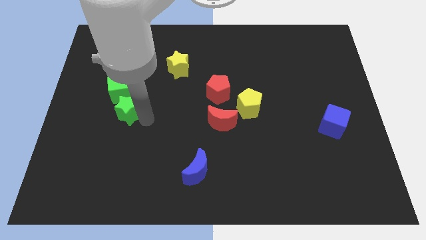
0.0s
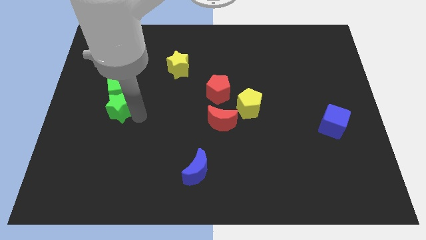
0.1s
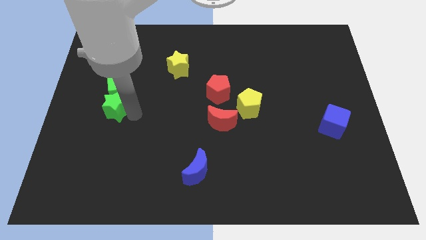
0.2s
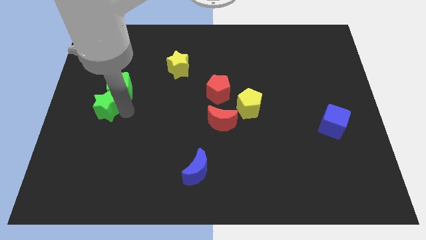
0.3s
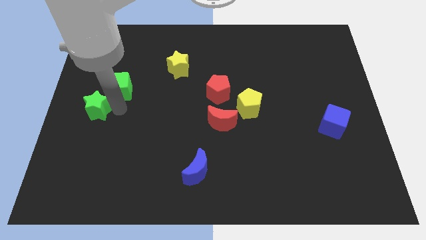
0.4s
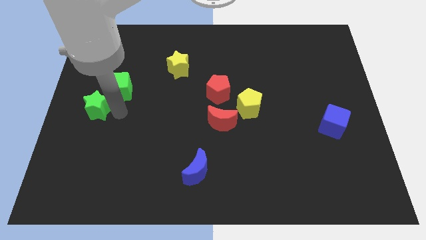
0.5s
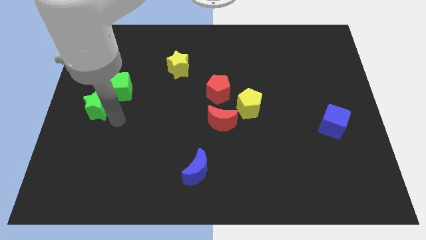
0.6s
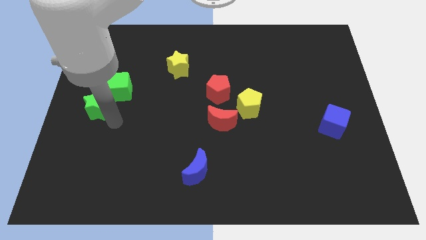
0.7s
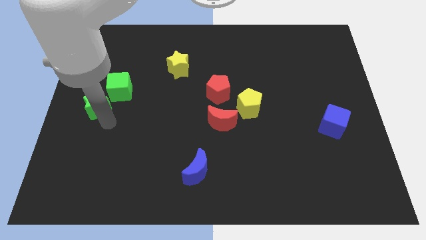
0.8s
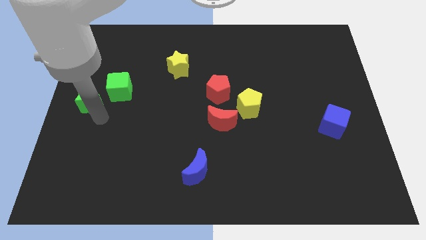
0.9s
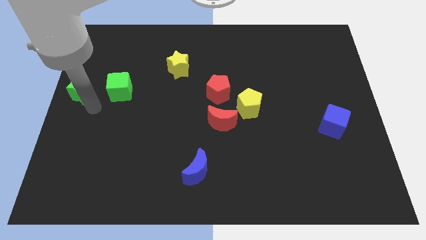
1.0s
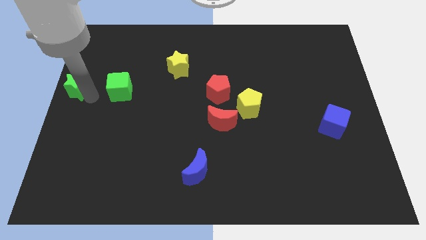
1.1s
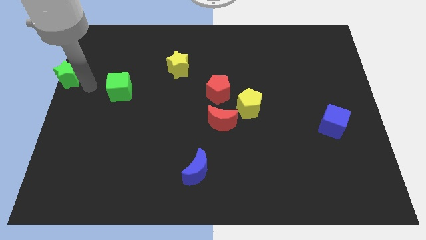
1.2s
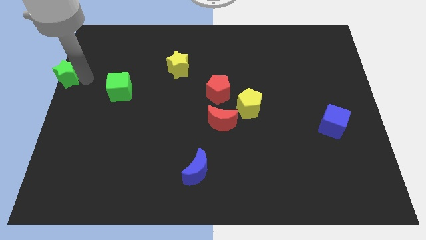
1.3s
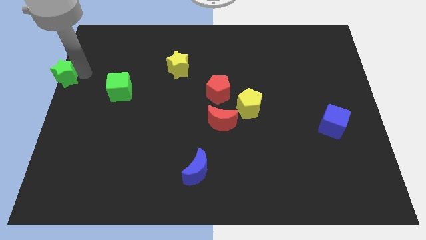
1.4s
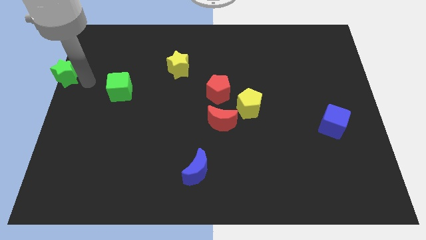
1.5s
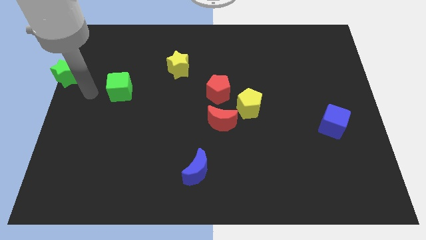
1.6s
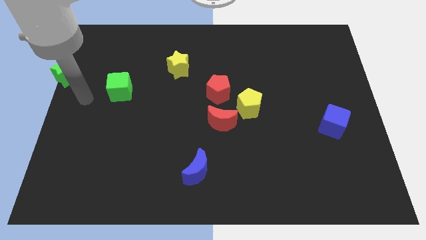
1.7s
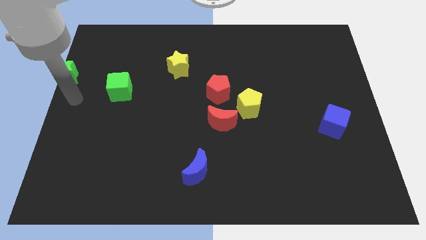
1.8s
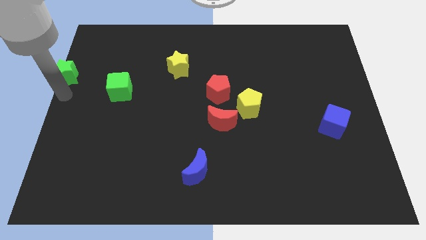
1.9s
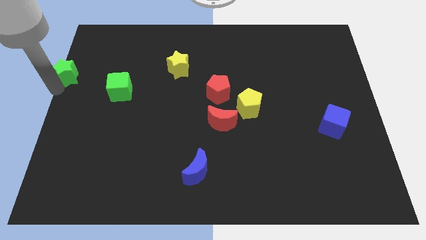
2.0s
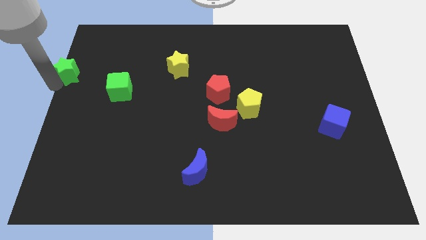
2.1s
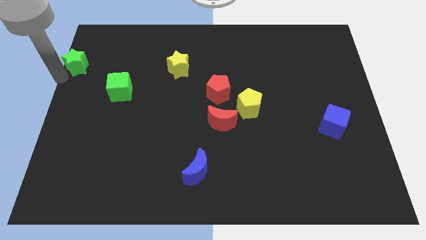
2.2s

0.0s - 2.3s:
separate green star and green cube

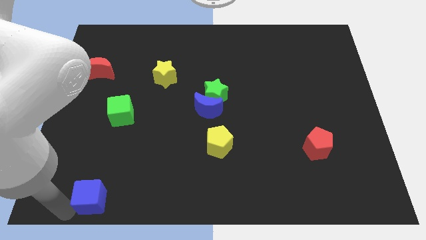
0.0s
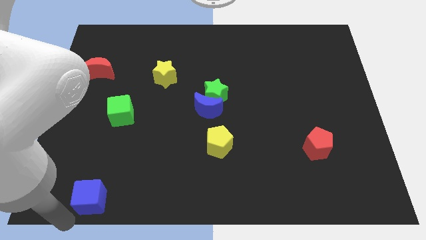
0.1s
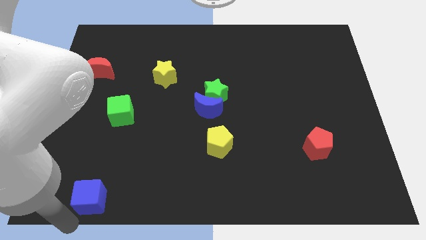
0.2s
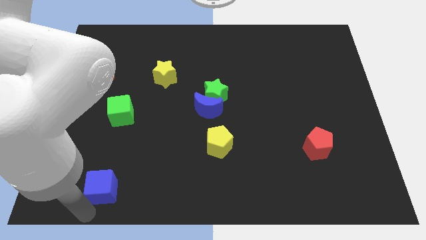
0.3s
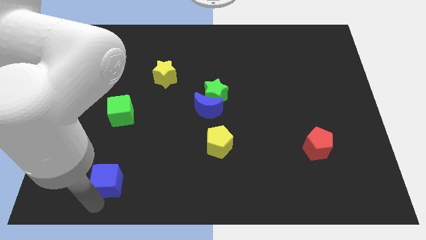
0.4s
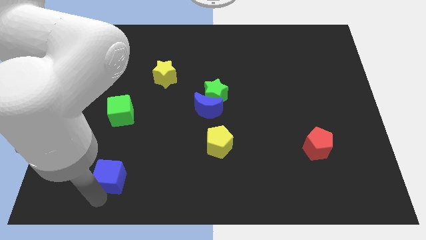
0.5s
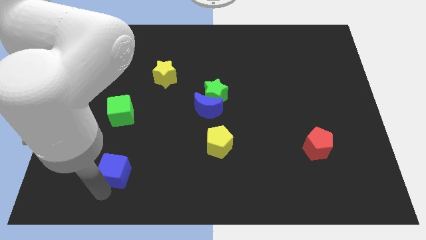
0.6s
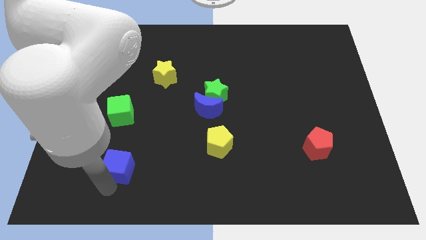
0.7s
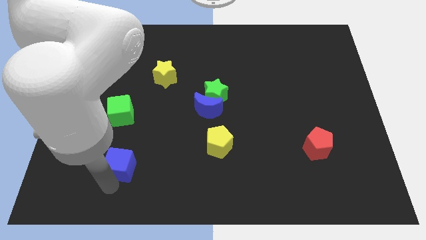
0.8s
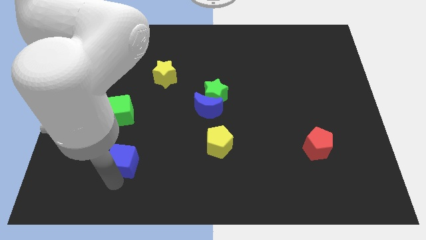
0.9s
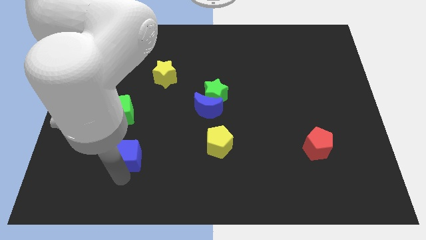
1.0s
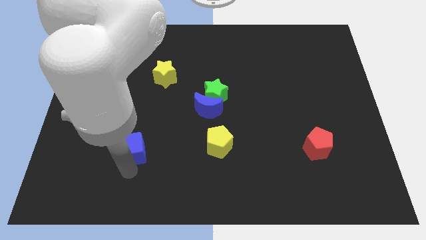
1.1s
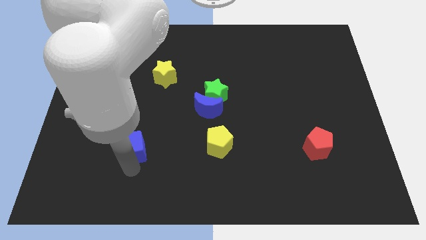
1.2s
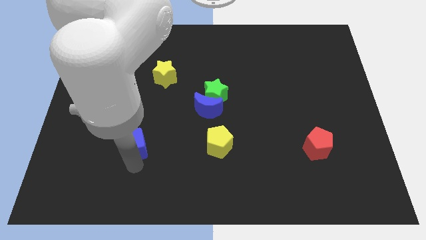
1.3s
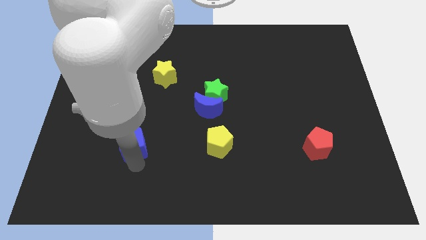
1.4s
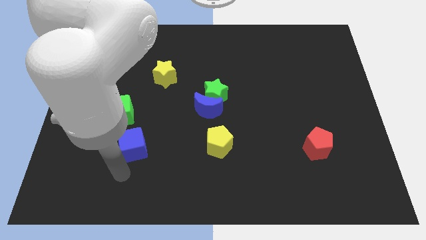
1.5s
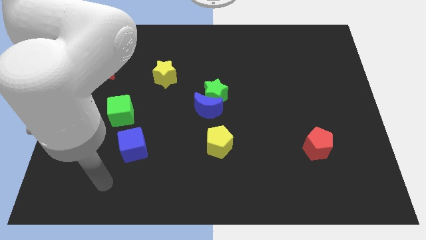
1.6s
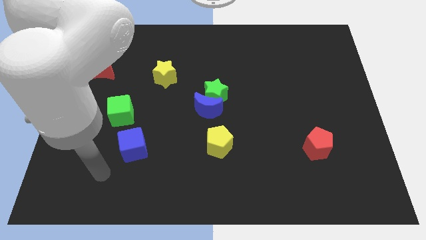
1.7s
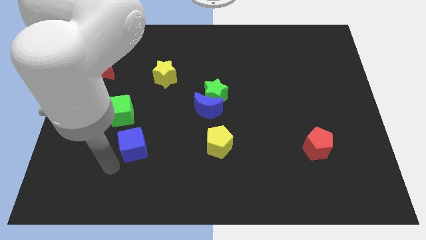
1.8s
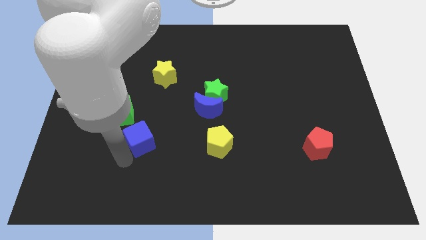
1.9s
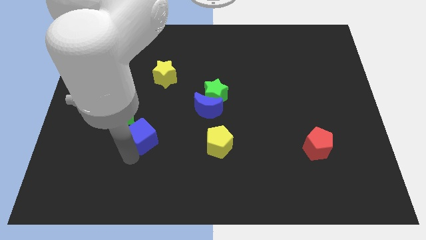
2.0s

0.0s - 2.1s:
move blue cube towards green cube

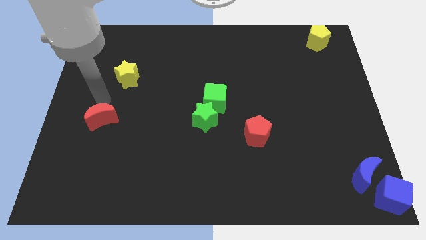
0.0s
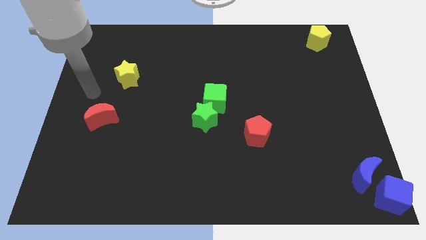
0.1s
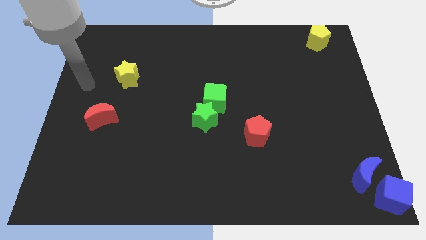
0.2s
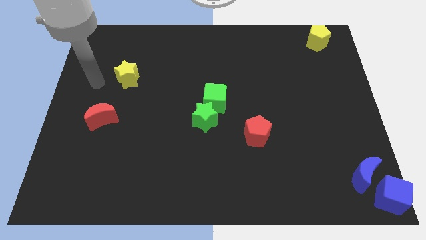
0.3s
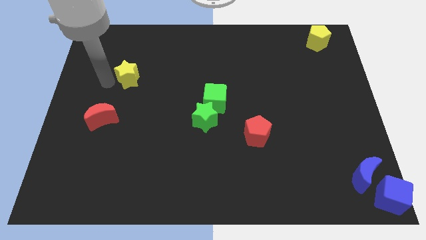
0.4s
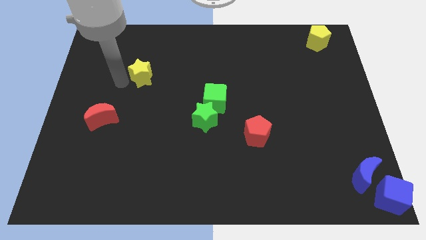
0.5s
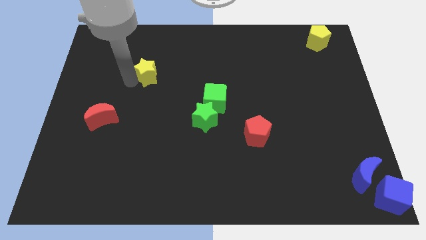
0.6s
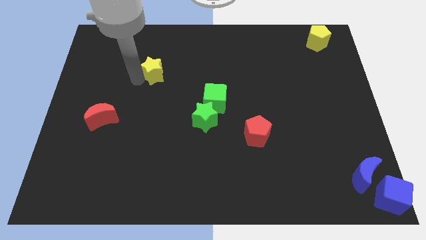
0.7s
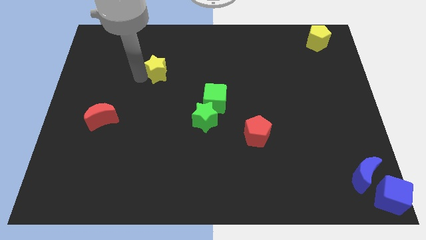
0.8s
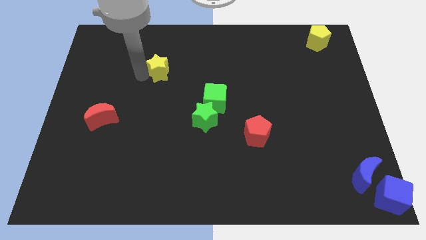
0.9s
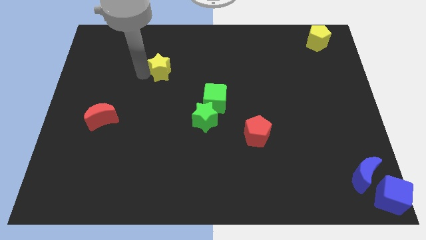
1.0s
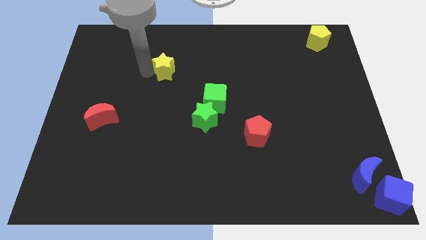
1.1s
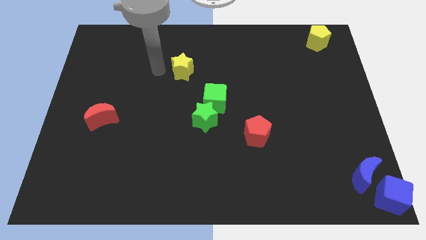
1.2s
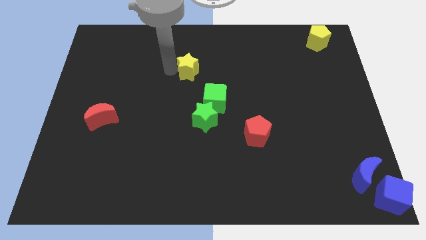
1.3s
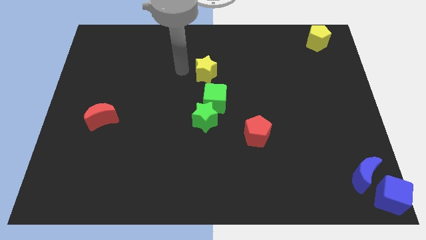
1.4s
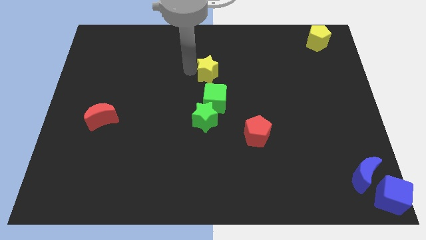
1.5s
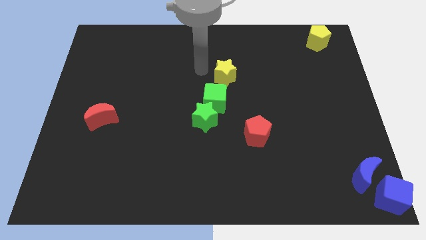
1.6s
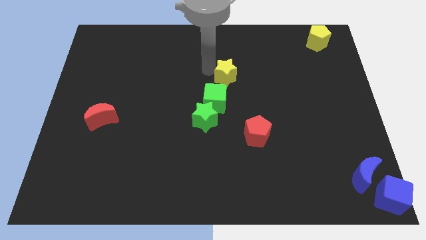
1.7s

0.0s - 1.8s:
place yellow star above the green cube

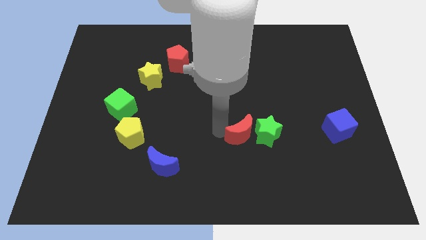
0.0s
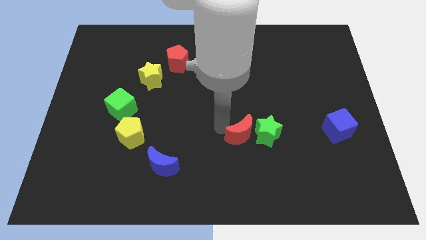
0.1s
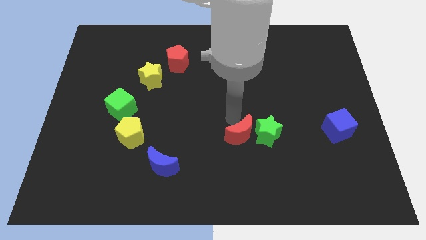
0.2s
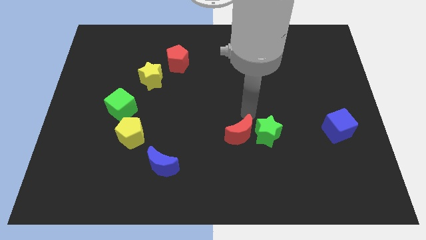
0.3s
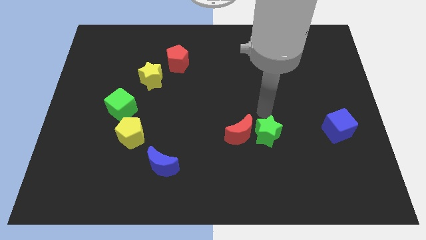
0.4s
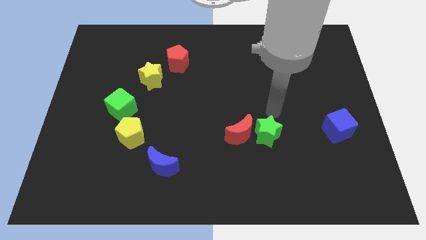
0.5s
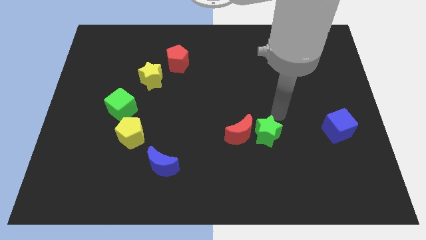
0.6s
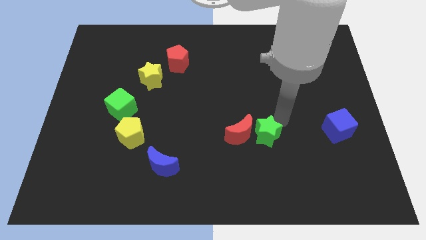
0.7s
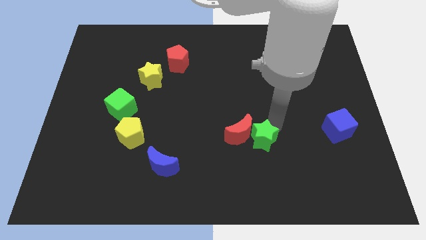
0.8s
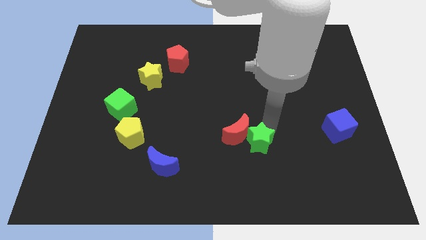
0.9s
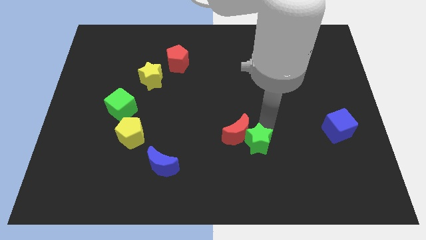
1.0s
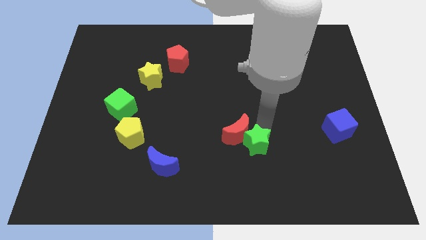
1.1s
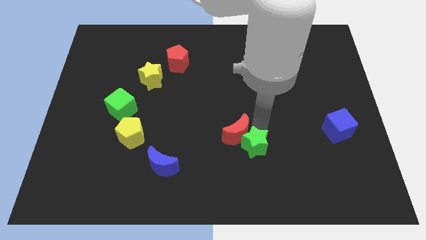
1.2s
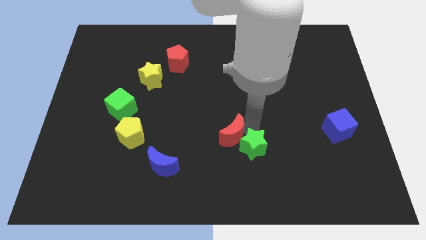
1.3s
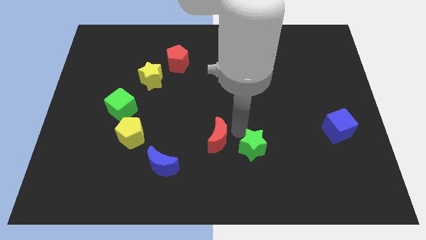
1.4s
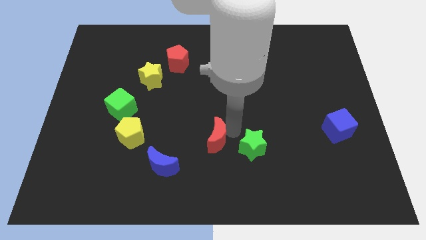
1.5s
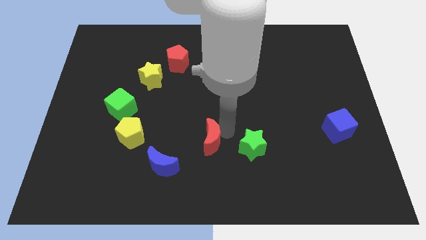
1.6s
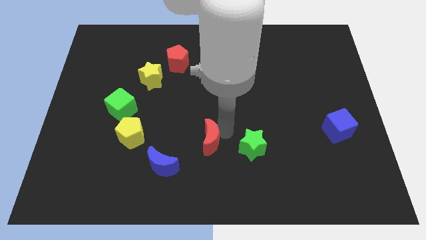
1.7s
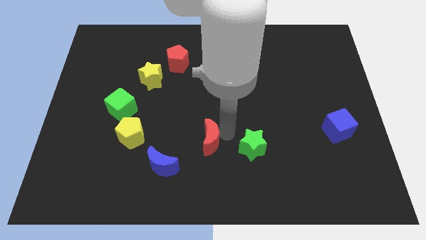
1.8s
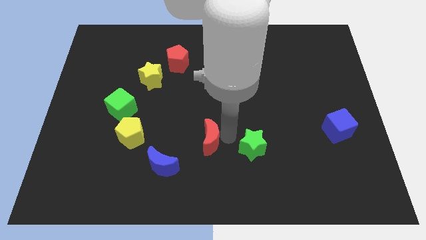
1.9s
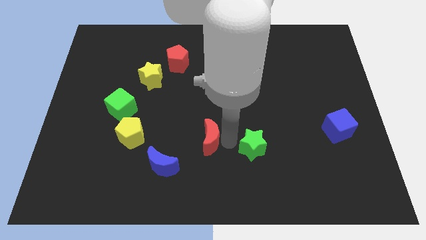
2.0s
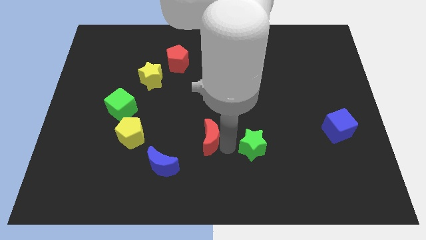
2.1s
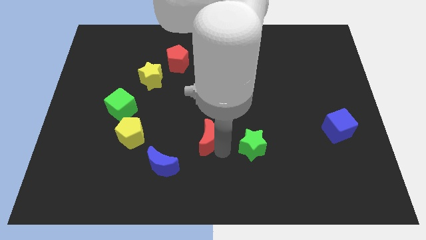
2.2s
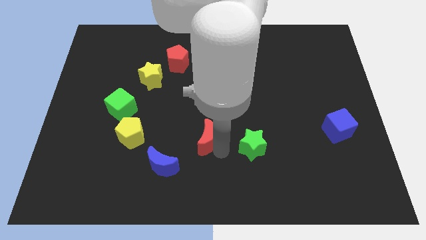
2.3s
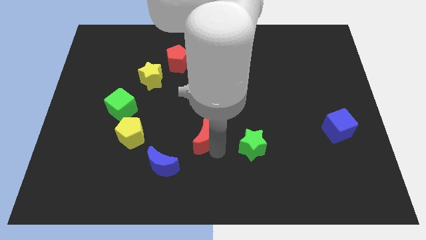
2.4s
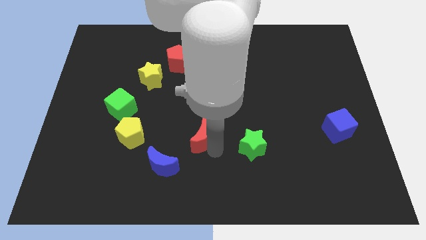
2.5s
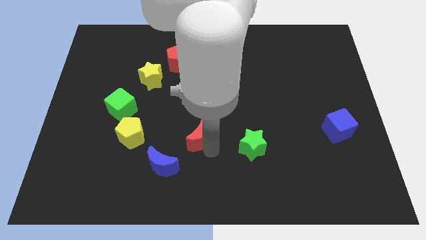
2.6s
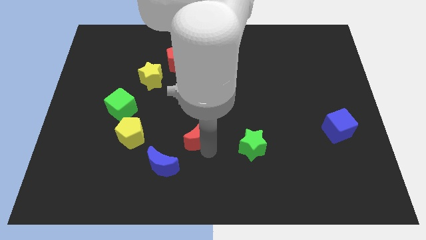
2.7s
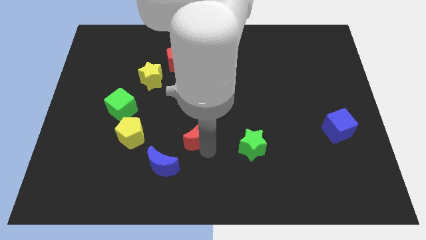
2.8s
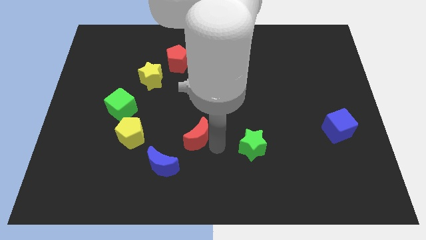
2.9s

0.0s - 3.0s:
push red crescent below red pentagon
